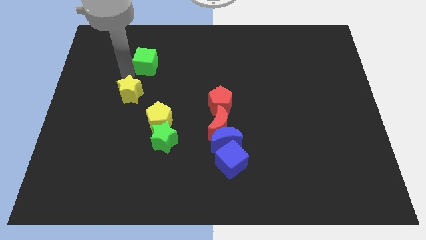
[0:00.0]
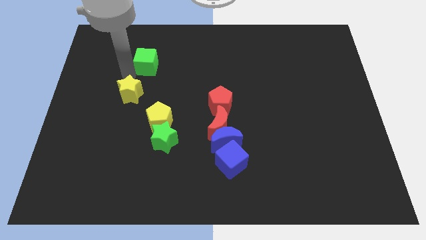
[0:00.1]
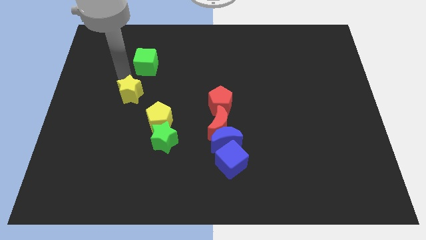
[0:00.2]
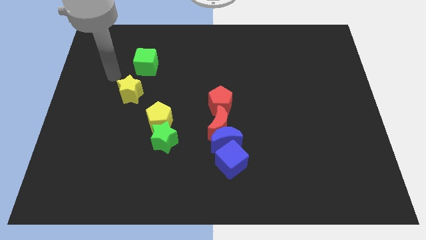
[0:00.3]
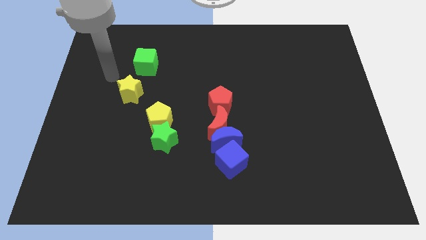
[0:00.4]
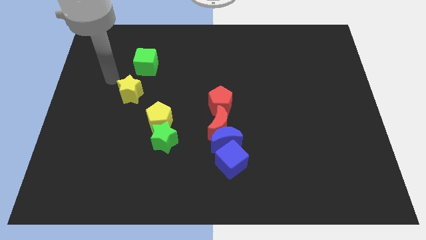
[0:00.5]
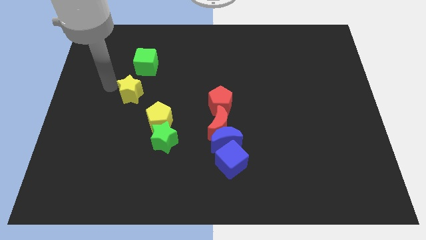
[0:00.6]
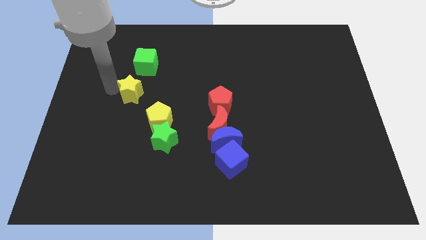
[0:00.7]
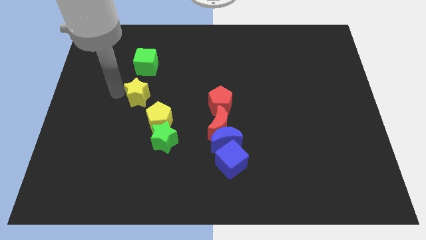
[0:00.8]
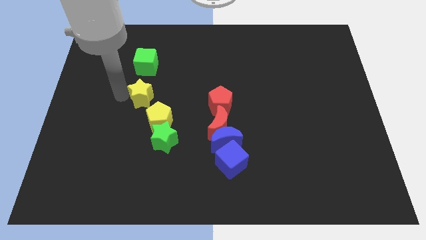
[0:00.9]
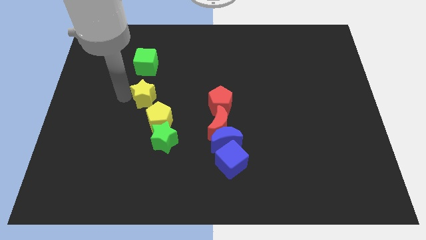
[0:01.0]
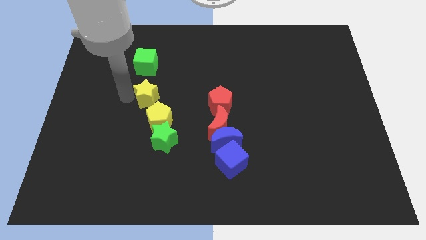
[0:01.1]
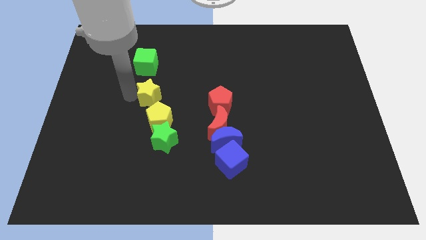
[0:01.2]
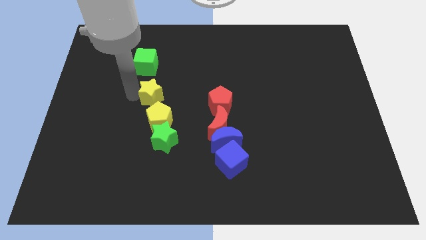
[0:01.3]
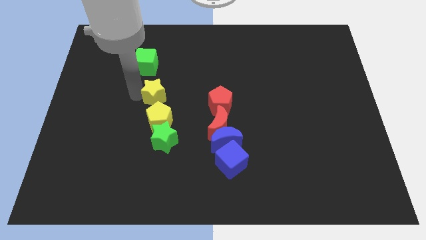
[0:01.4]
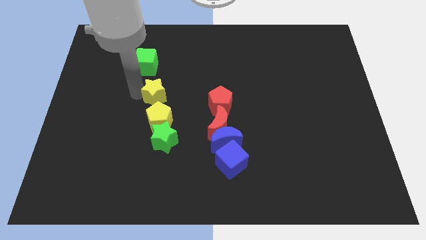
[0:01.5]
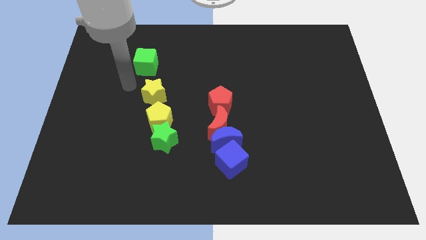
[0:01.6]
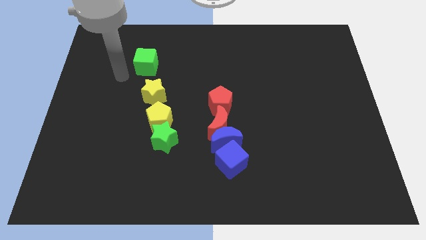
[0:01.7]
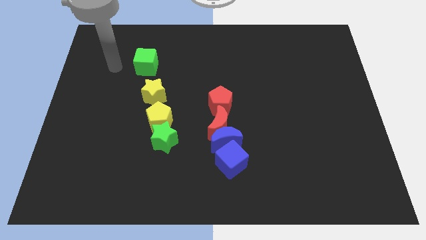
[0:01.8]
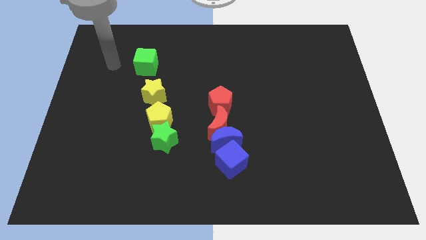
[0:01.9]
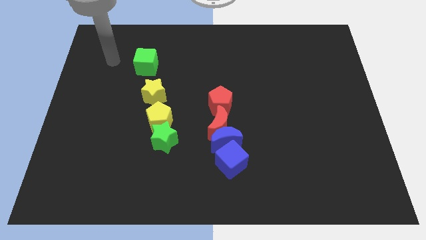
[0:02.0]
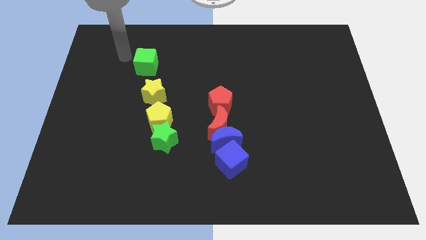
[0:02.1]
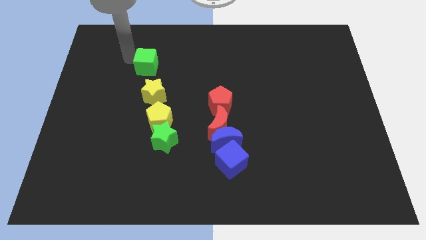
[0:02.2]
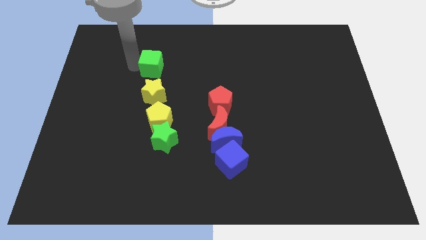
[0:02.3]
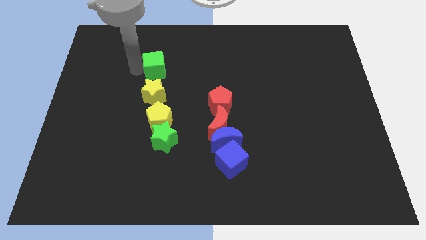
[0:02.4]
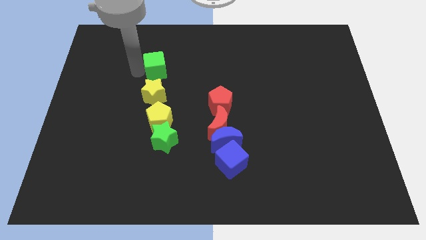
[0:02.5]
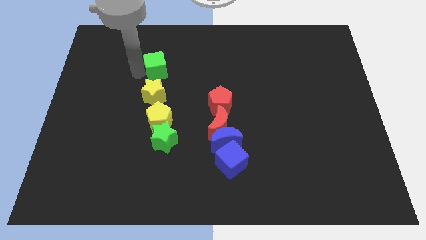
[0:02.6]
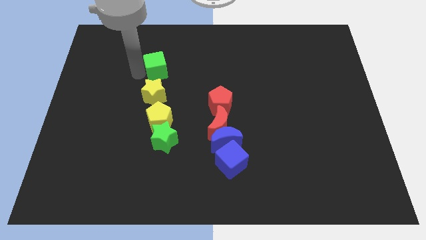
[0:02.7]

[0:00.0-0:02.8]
push the yellow star and the green cube slightly to the right to form a vertical line

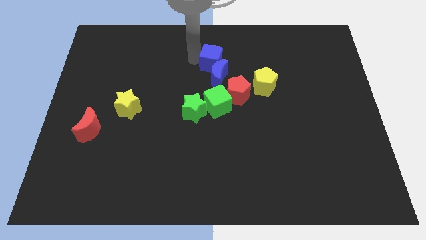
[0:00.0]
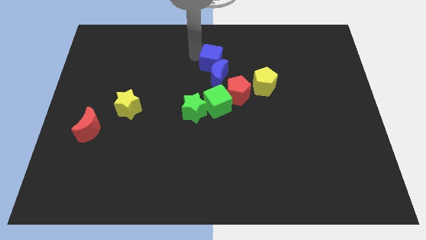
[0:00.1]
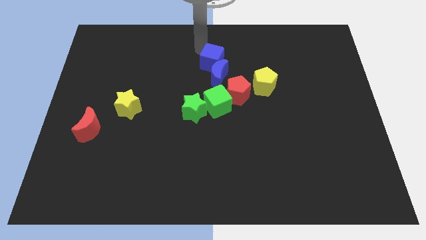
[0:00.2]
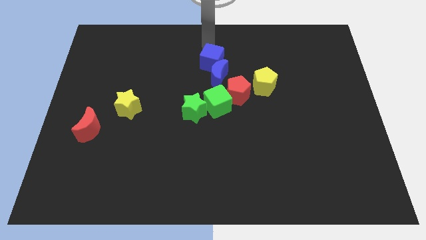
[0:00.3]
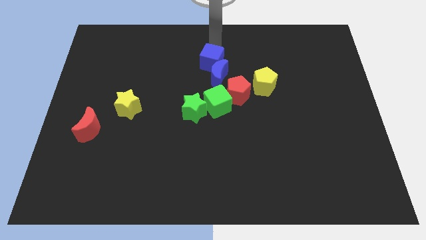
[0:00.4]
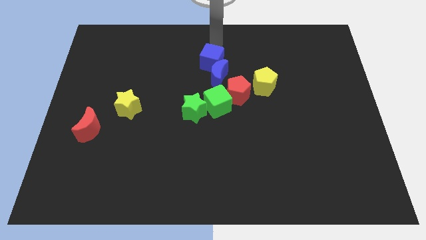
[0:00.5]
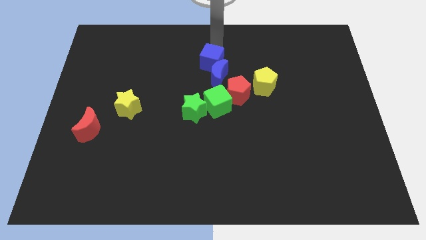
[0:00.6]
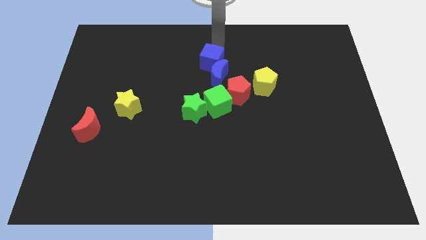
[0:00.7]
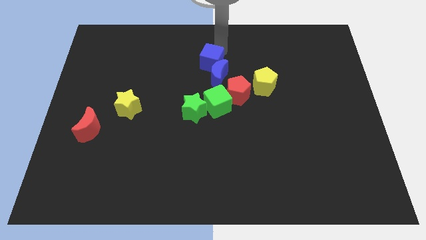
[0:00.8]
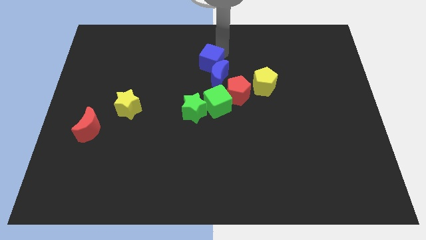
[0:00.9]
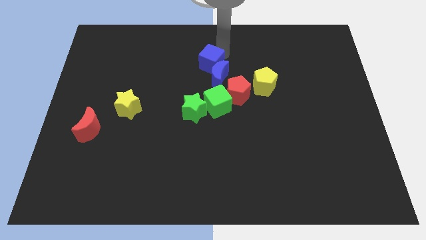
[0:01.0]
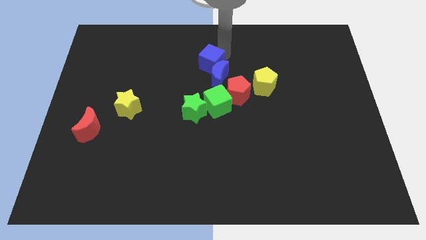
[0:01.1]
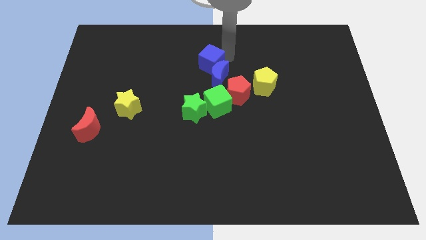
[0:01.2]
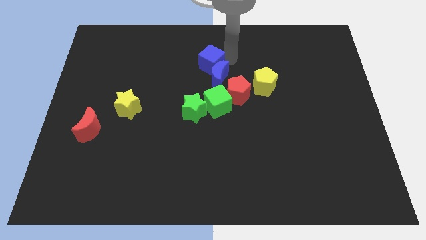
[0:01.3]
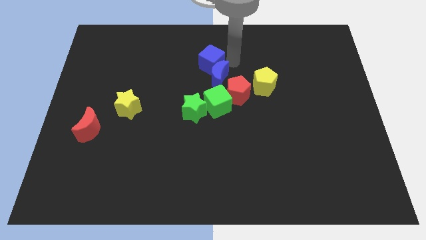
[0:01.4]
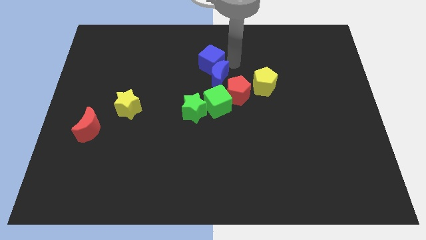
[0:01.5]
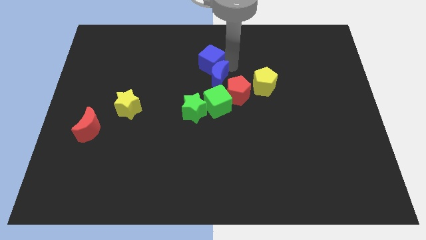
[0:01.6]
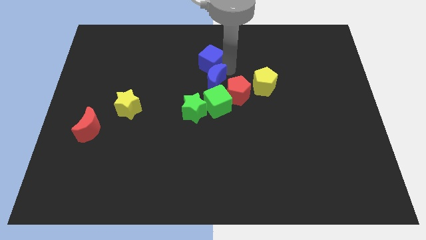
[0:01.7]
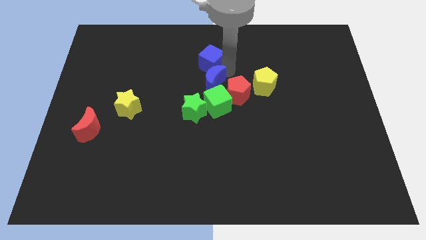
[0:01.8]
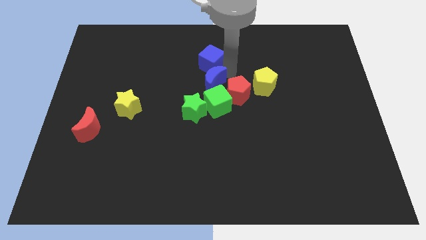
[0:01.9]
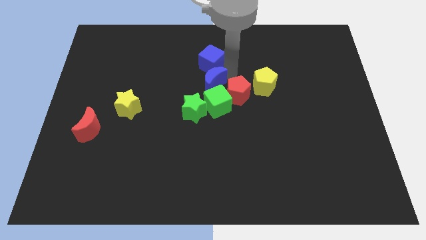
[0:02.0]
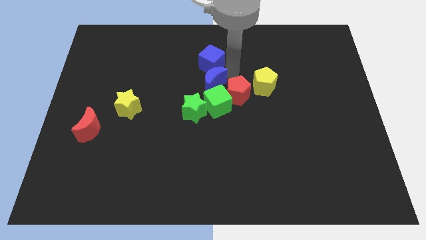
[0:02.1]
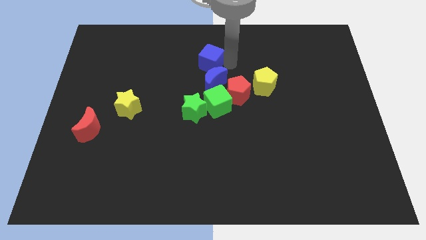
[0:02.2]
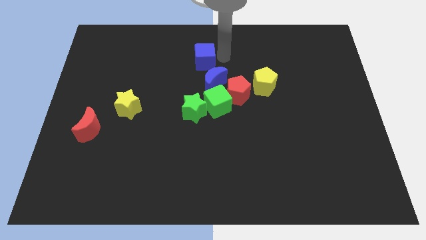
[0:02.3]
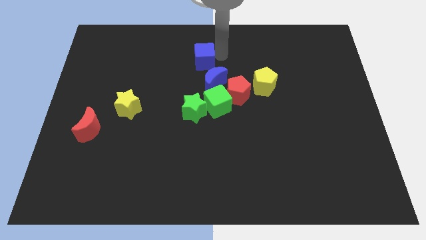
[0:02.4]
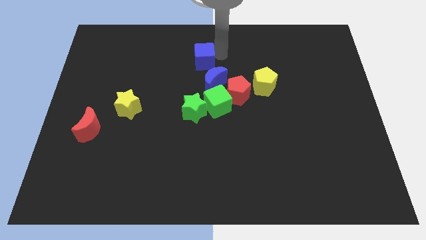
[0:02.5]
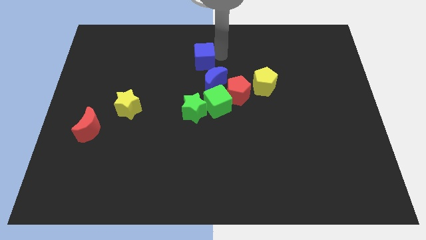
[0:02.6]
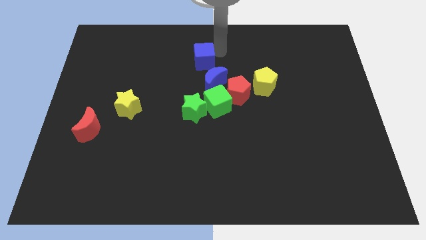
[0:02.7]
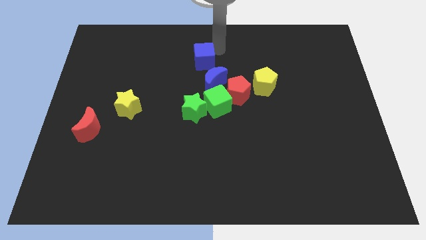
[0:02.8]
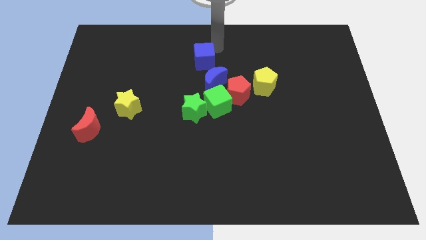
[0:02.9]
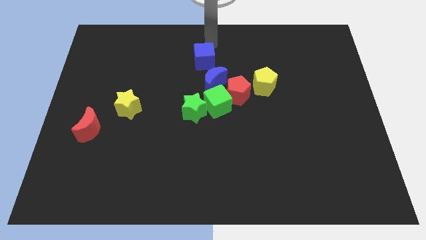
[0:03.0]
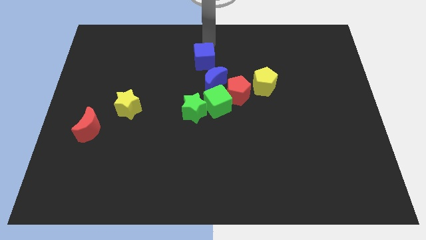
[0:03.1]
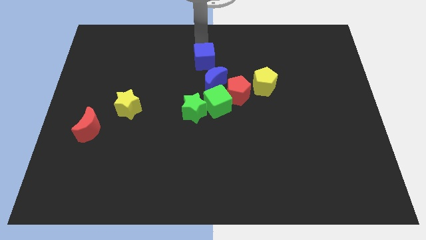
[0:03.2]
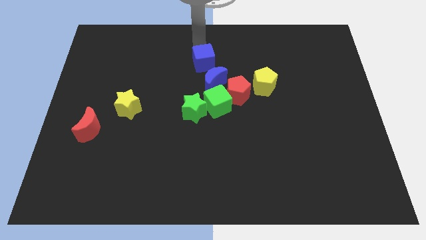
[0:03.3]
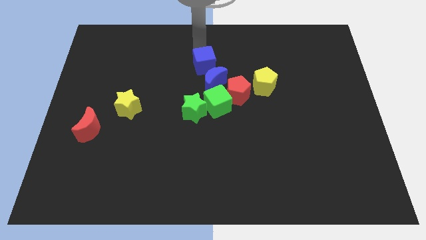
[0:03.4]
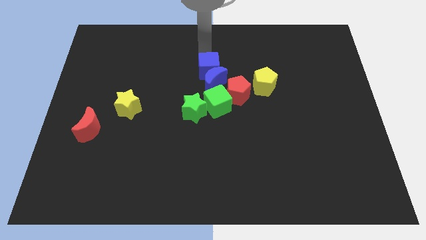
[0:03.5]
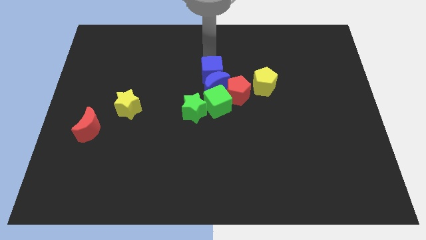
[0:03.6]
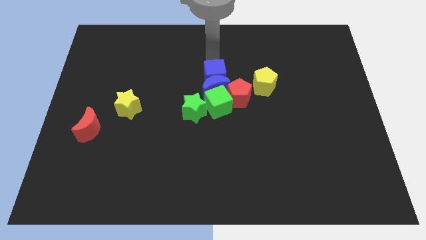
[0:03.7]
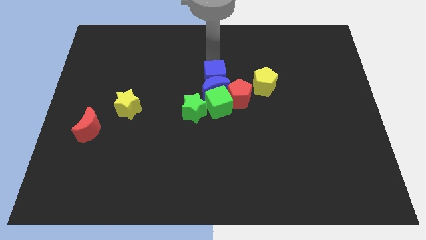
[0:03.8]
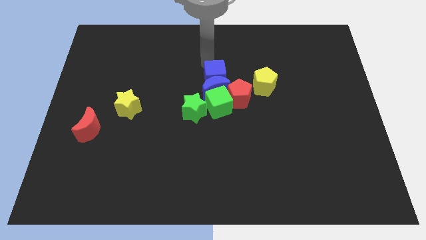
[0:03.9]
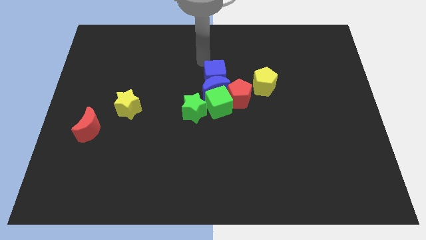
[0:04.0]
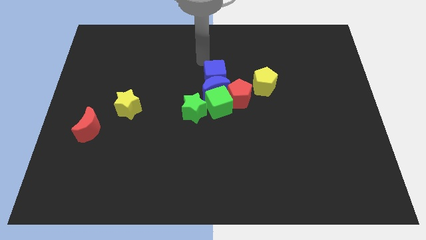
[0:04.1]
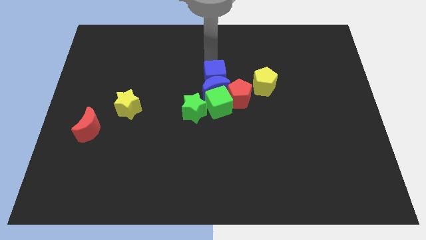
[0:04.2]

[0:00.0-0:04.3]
put the blue blocks at the top of green cube

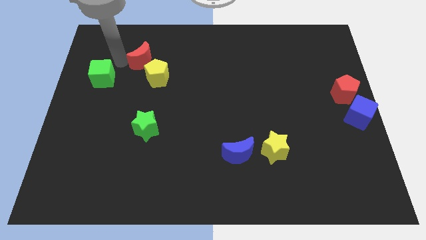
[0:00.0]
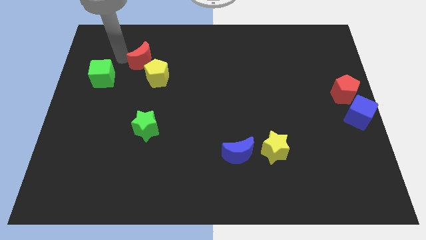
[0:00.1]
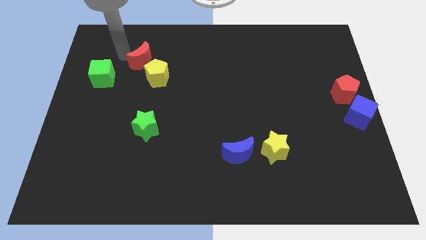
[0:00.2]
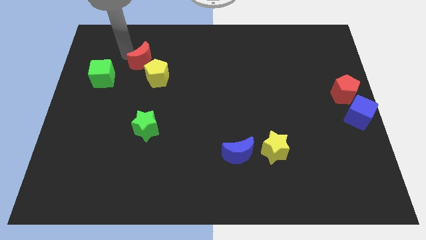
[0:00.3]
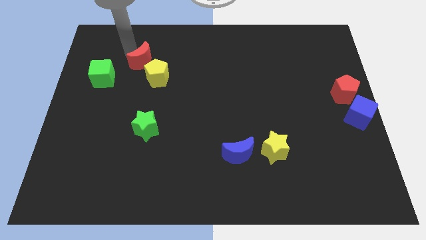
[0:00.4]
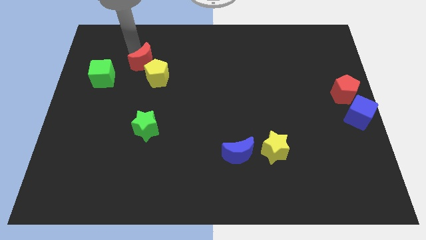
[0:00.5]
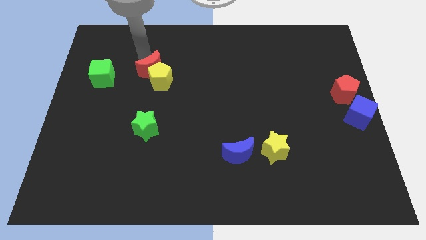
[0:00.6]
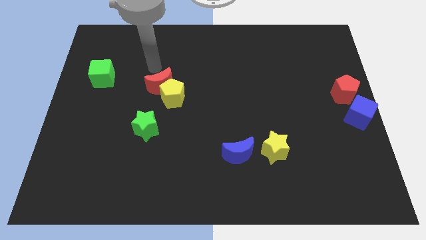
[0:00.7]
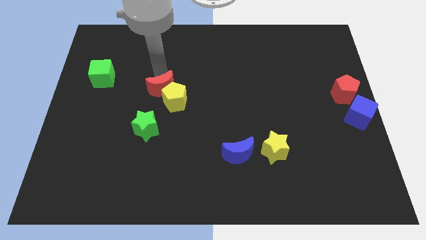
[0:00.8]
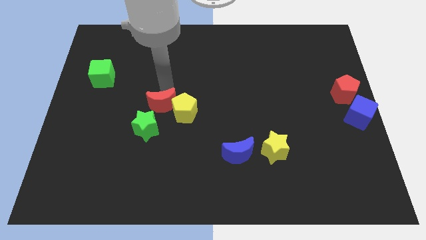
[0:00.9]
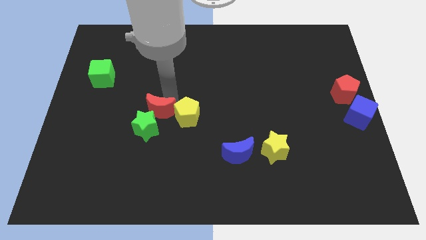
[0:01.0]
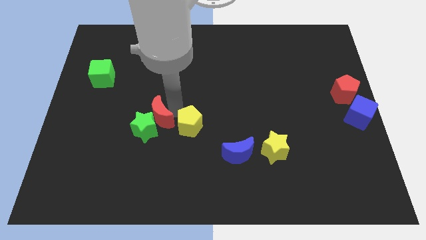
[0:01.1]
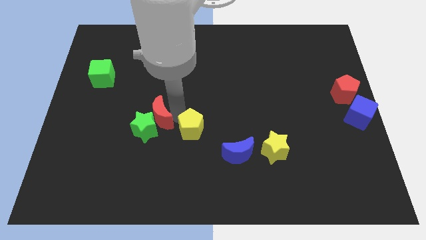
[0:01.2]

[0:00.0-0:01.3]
push red moon along with yellow pentagon to the right of the green star

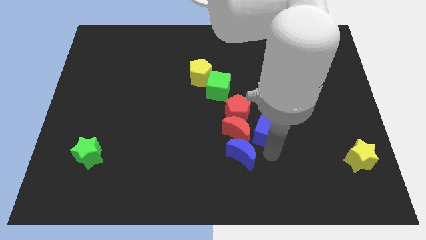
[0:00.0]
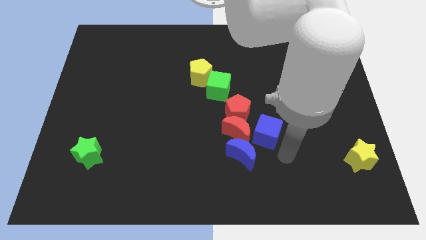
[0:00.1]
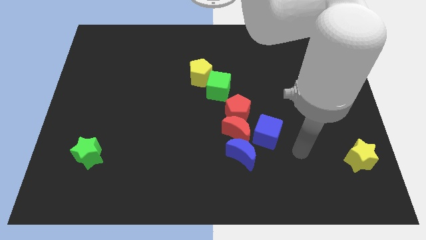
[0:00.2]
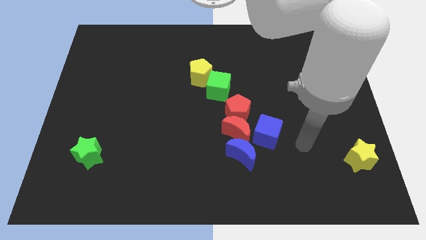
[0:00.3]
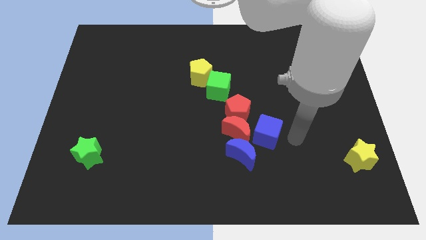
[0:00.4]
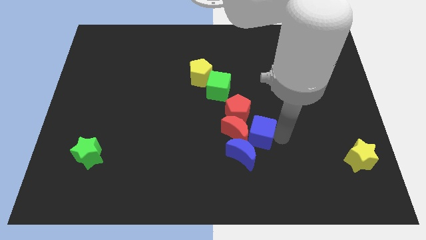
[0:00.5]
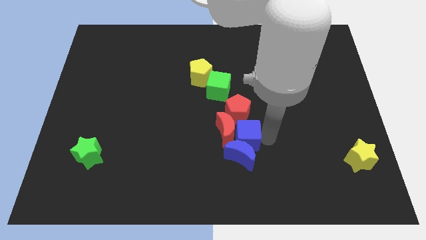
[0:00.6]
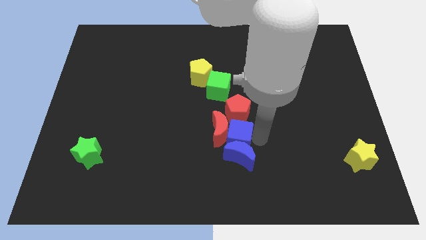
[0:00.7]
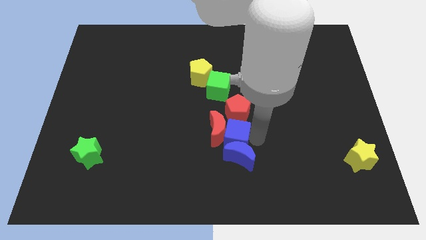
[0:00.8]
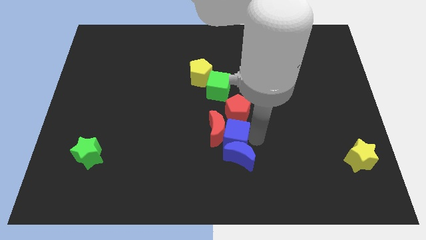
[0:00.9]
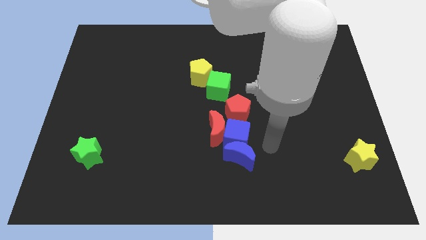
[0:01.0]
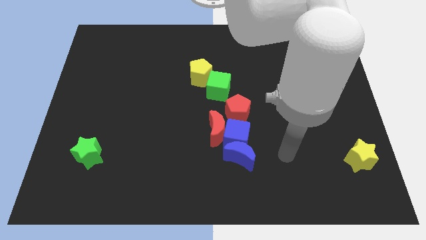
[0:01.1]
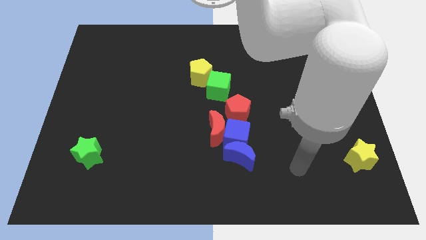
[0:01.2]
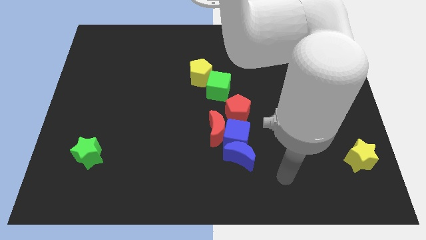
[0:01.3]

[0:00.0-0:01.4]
push the blue cube and red moon together towards the center of the board
